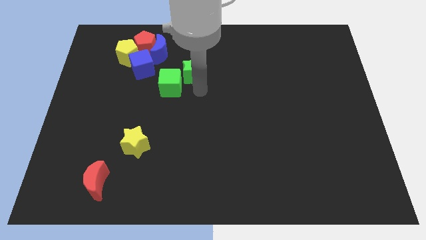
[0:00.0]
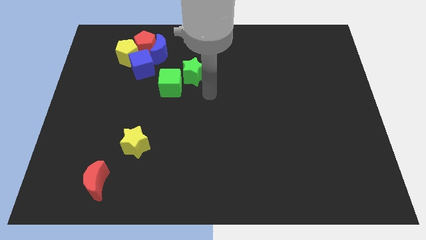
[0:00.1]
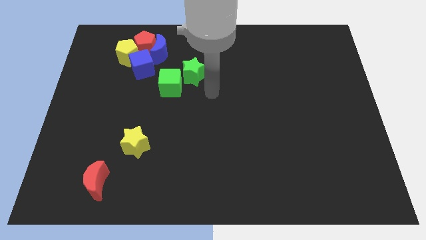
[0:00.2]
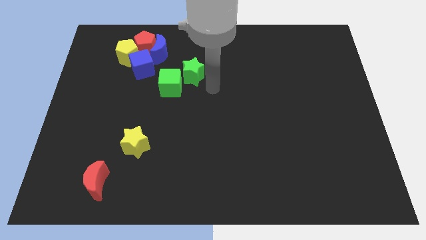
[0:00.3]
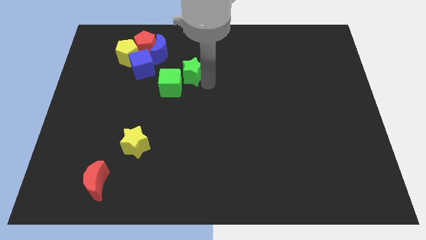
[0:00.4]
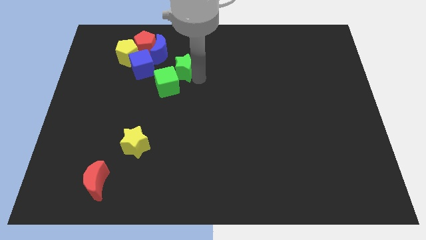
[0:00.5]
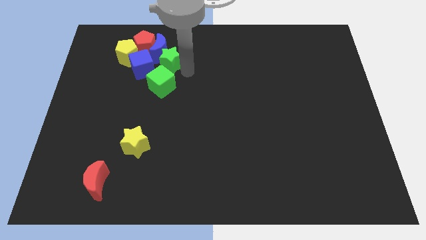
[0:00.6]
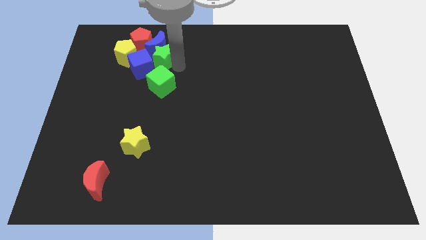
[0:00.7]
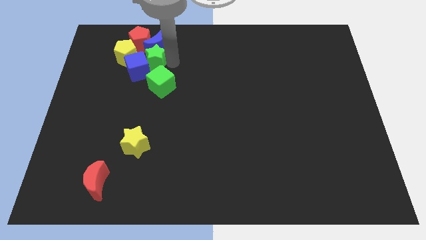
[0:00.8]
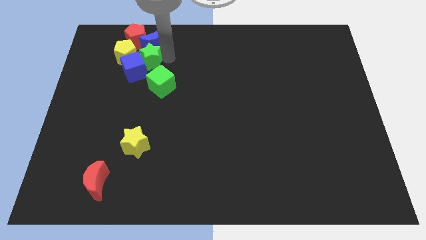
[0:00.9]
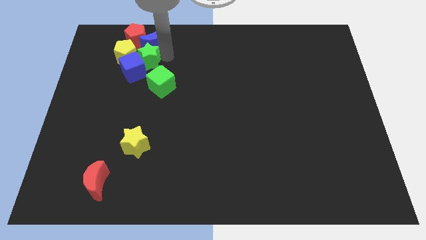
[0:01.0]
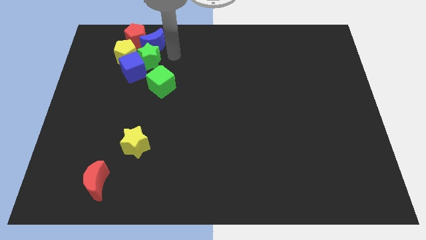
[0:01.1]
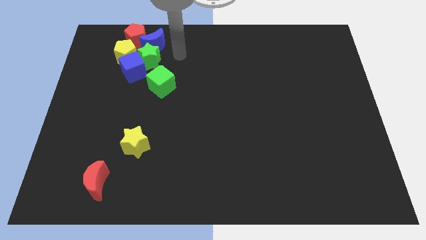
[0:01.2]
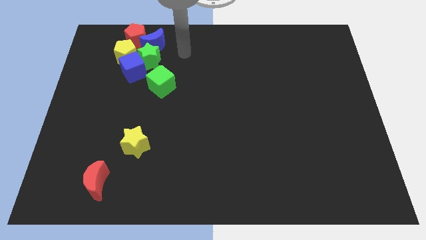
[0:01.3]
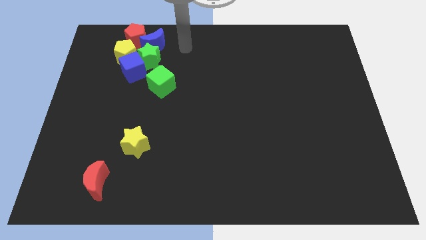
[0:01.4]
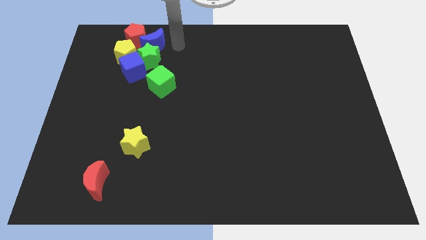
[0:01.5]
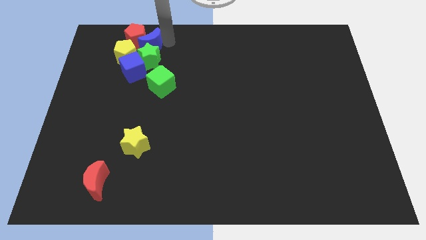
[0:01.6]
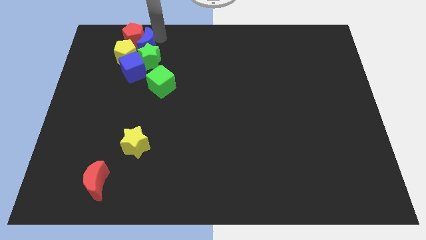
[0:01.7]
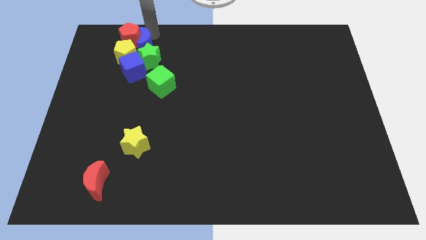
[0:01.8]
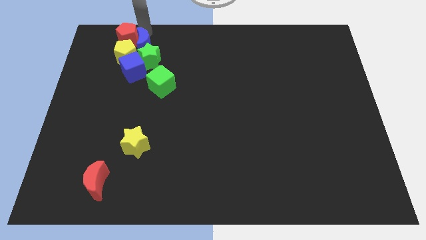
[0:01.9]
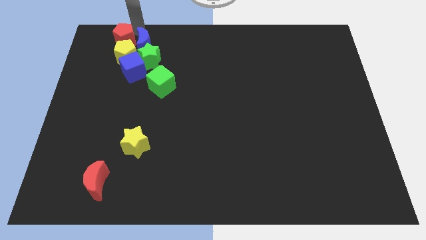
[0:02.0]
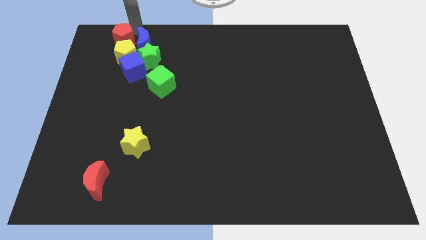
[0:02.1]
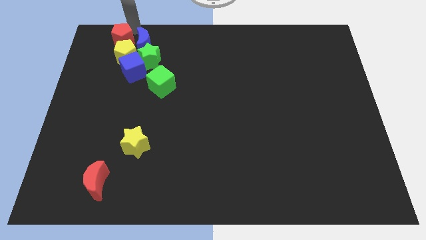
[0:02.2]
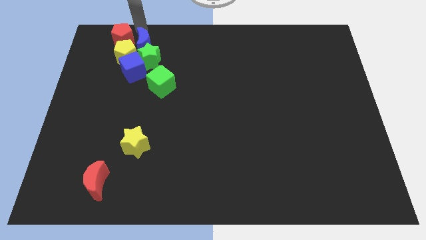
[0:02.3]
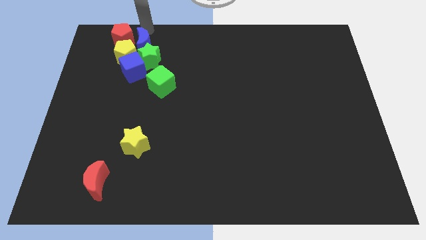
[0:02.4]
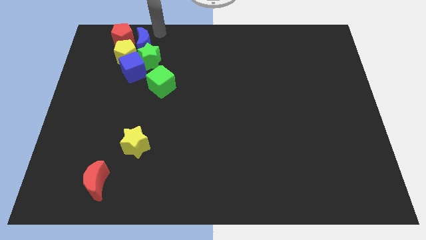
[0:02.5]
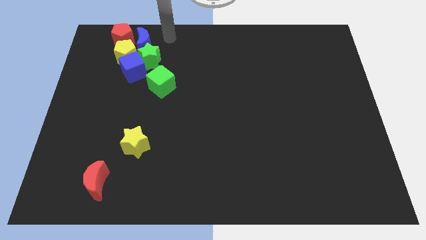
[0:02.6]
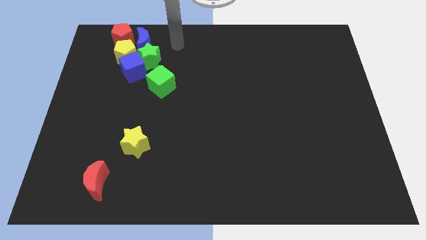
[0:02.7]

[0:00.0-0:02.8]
push green star into group of blocks

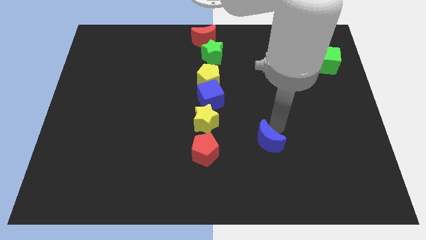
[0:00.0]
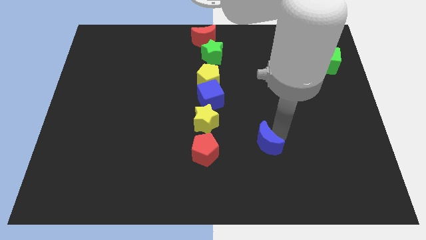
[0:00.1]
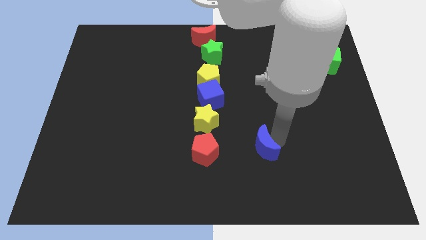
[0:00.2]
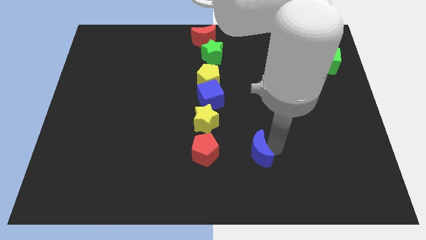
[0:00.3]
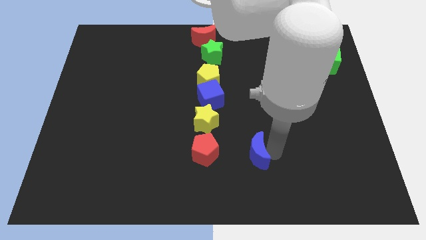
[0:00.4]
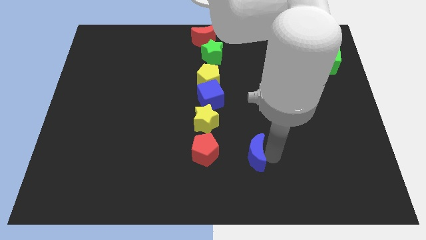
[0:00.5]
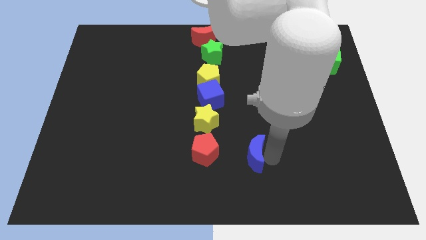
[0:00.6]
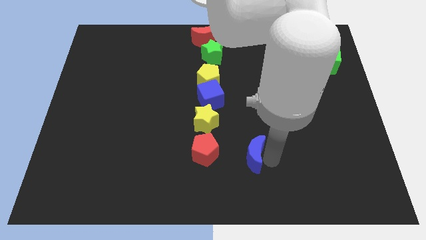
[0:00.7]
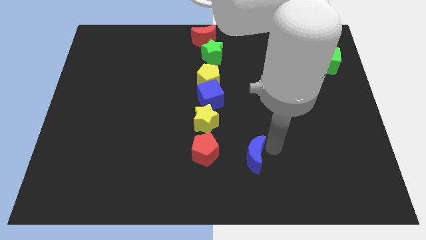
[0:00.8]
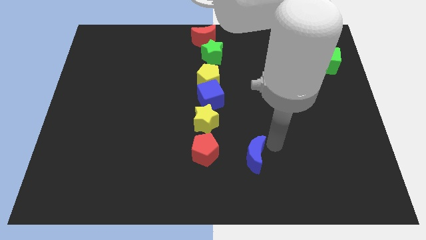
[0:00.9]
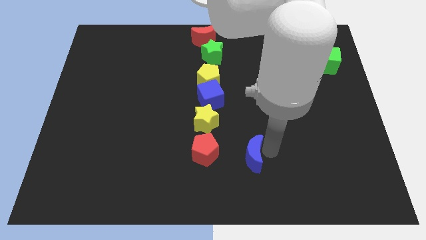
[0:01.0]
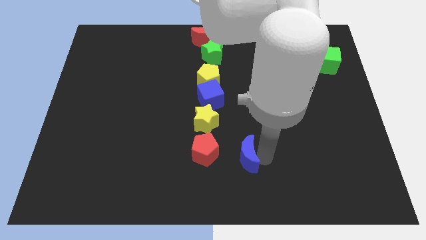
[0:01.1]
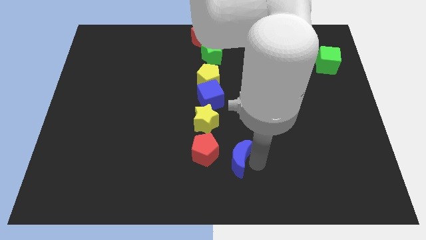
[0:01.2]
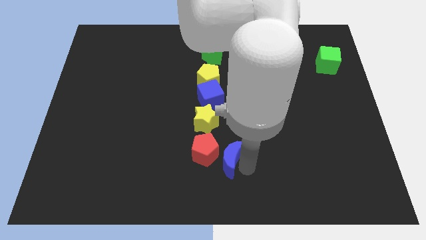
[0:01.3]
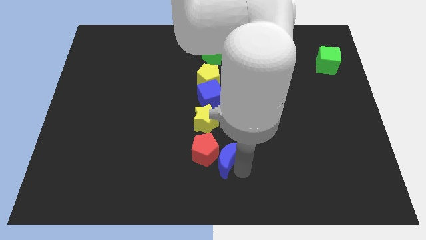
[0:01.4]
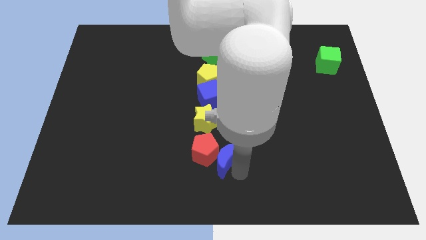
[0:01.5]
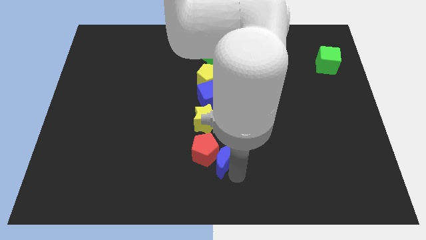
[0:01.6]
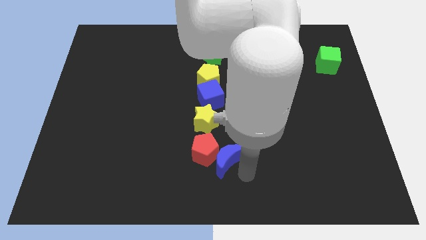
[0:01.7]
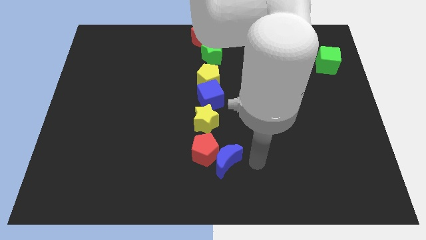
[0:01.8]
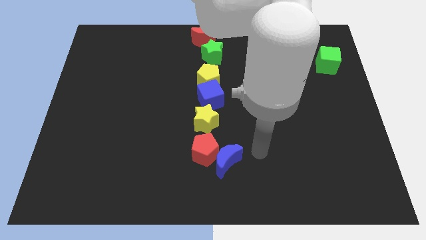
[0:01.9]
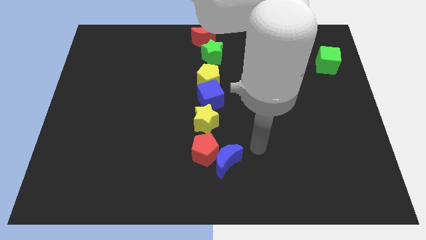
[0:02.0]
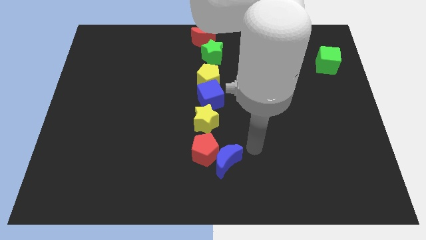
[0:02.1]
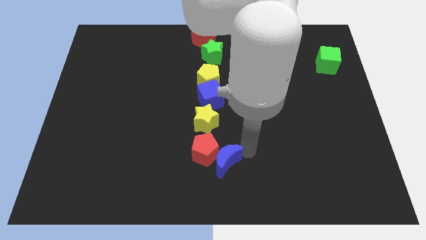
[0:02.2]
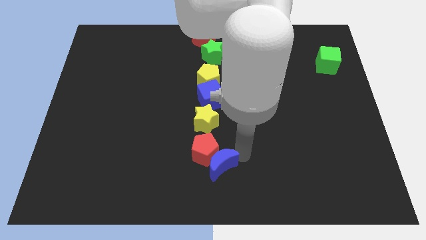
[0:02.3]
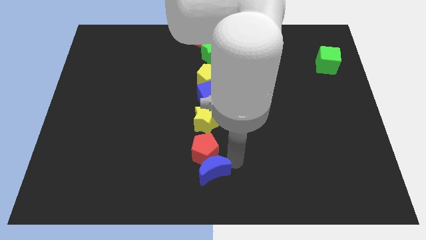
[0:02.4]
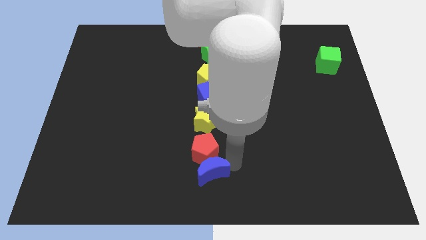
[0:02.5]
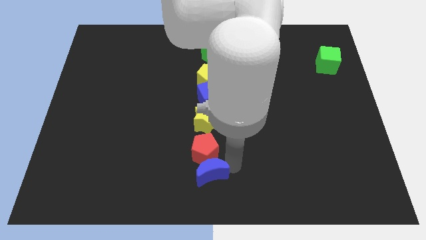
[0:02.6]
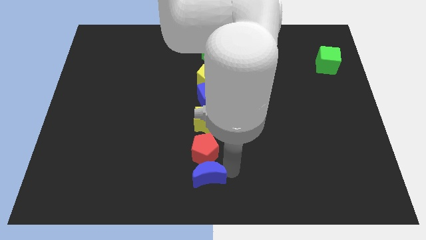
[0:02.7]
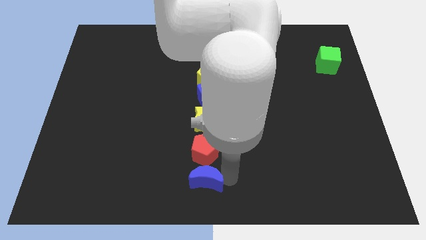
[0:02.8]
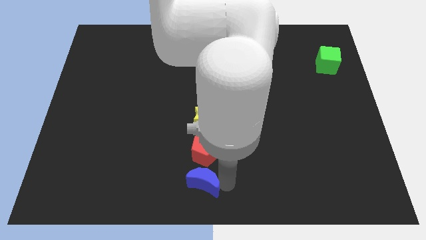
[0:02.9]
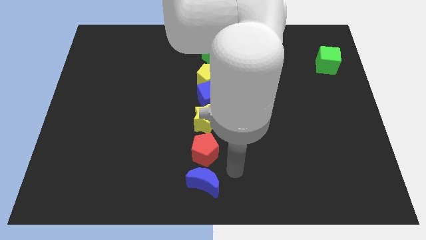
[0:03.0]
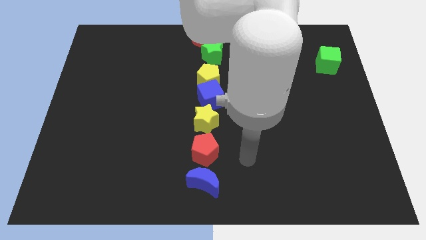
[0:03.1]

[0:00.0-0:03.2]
place blue moon to the bottom of red pentagon

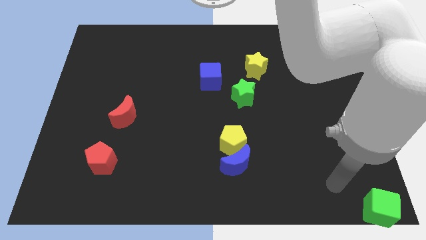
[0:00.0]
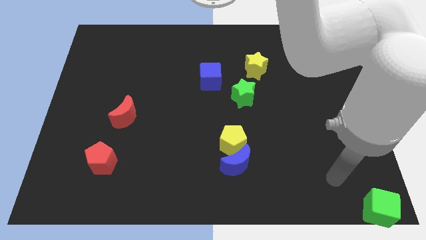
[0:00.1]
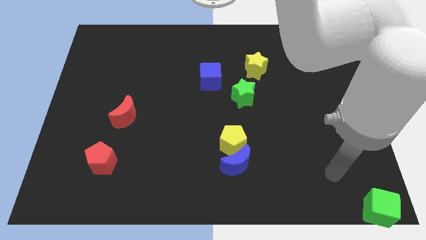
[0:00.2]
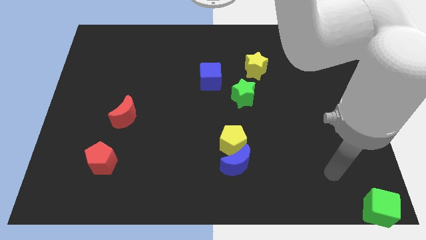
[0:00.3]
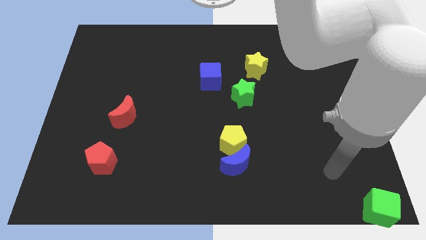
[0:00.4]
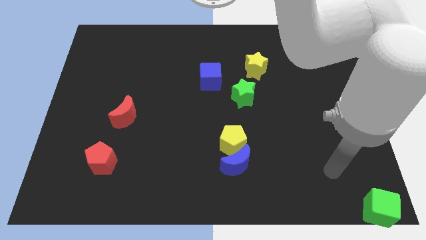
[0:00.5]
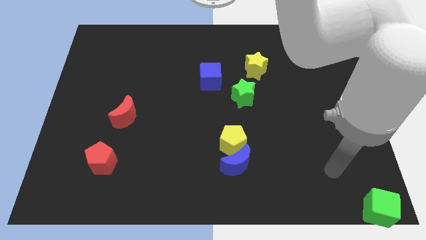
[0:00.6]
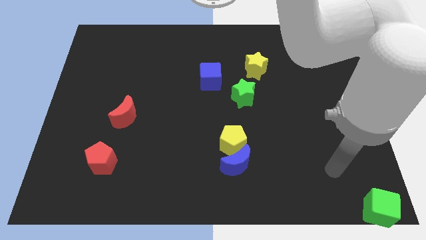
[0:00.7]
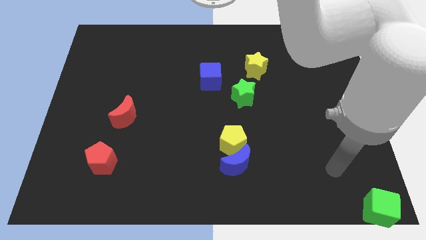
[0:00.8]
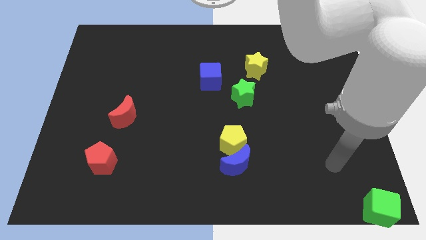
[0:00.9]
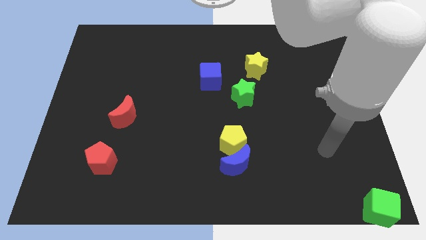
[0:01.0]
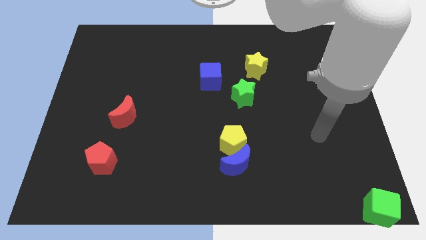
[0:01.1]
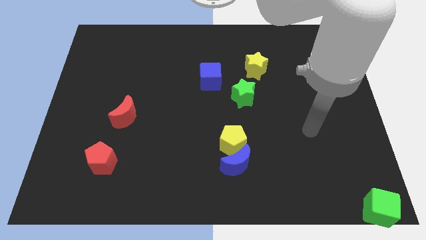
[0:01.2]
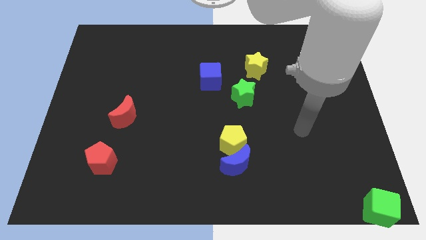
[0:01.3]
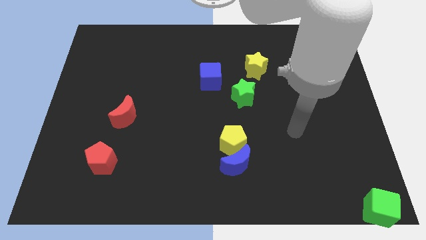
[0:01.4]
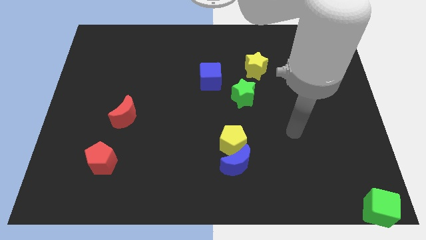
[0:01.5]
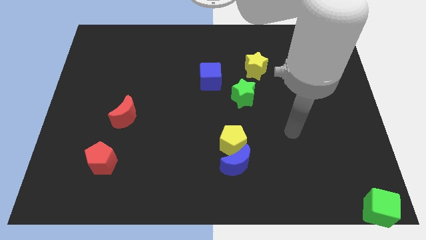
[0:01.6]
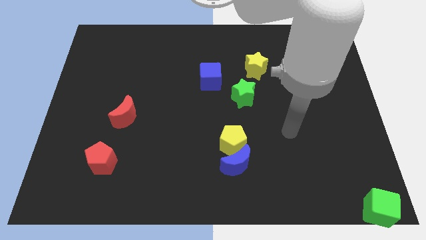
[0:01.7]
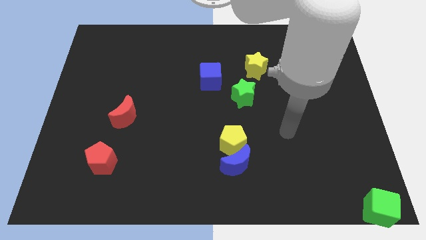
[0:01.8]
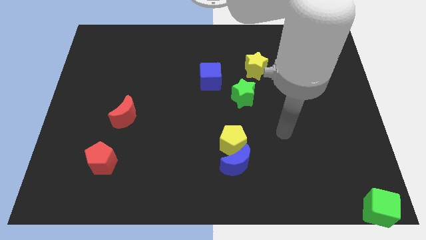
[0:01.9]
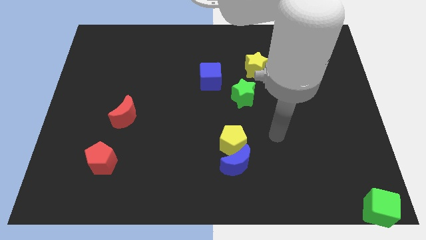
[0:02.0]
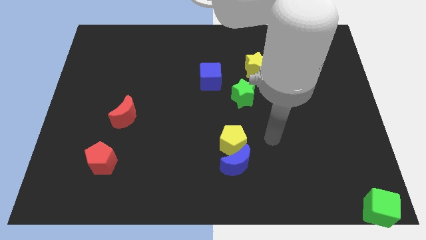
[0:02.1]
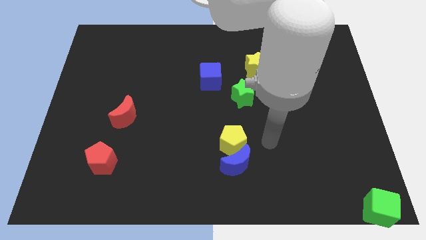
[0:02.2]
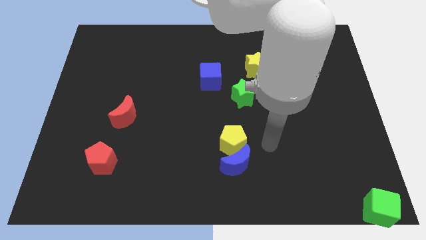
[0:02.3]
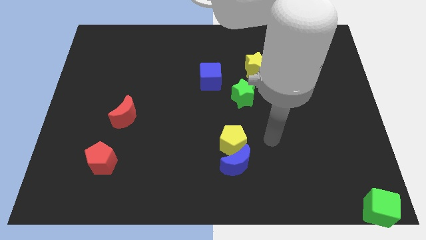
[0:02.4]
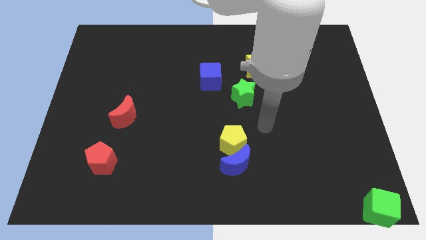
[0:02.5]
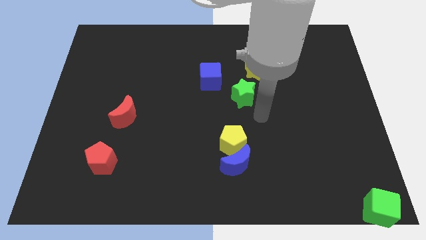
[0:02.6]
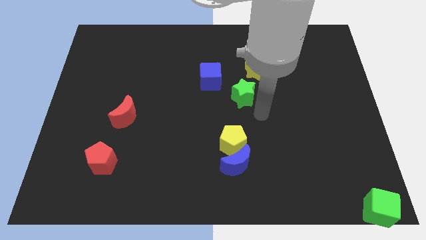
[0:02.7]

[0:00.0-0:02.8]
move your arm and point between green star and yellow pentagon

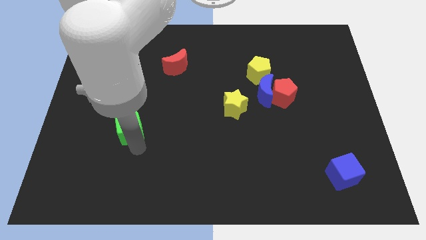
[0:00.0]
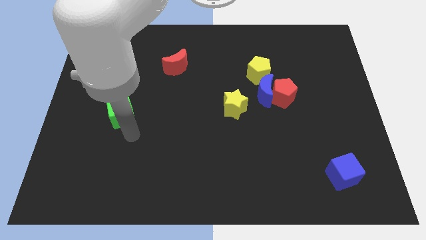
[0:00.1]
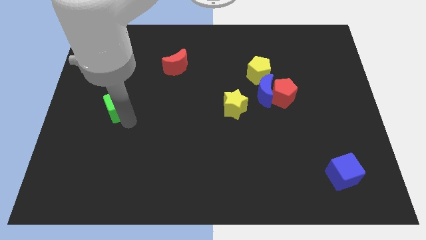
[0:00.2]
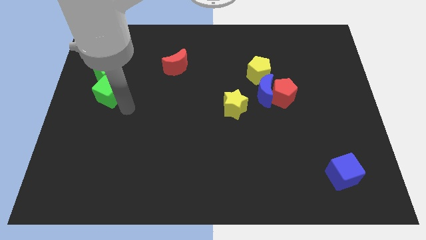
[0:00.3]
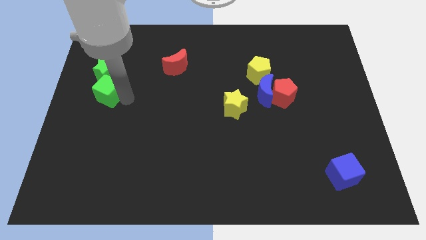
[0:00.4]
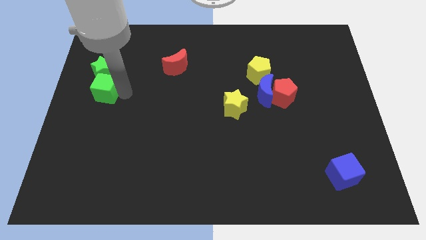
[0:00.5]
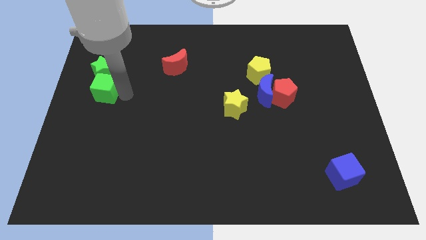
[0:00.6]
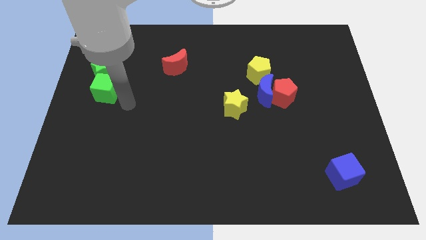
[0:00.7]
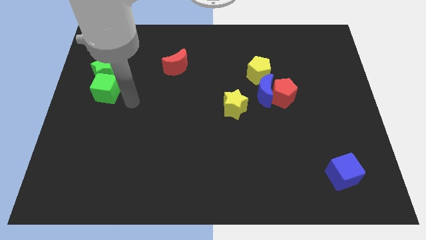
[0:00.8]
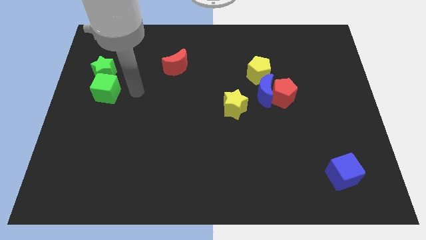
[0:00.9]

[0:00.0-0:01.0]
push the green cube into the green star
